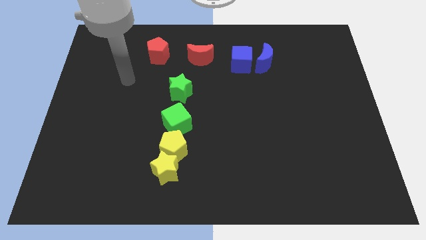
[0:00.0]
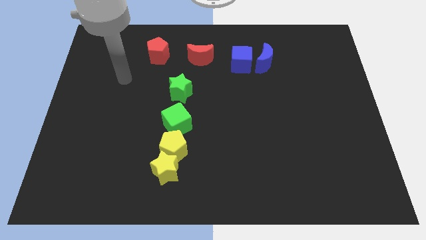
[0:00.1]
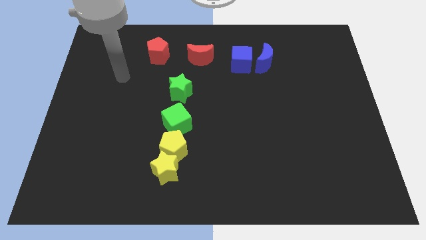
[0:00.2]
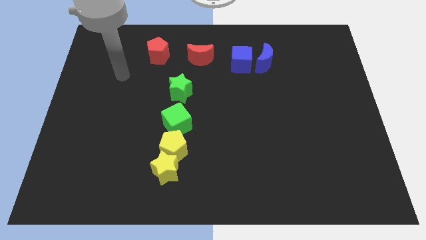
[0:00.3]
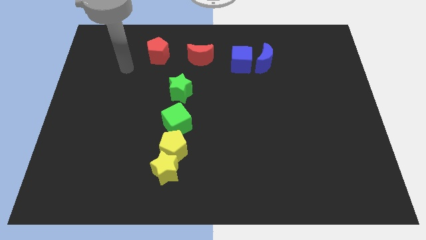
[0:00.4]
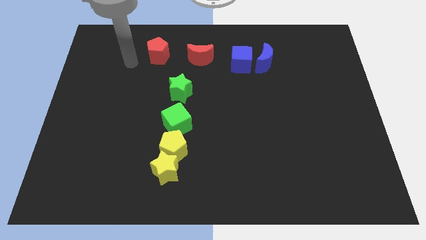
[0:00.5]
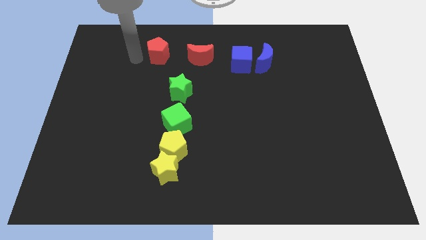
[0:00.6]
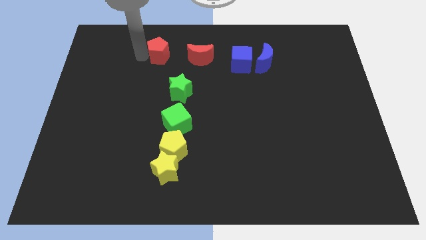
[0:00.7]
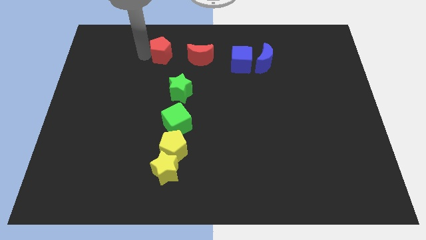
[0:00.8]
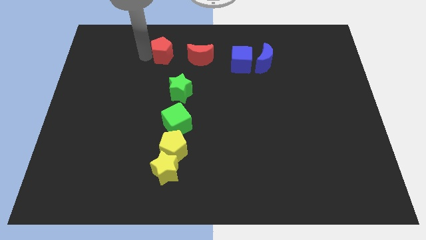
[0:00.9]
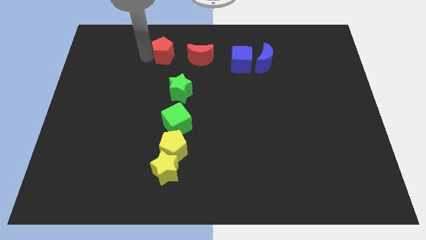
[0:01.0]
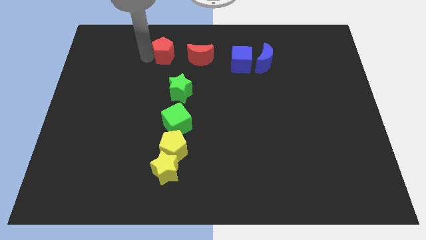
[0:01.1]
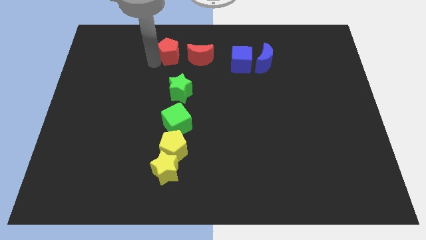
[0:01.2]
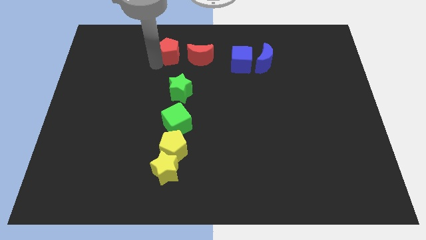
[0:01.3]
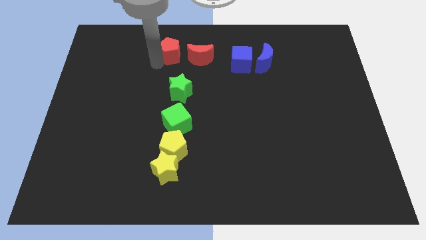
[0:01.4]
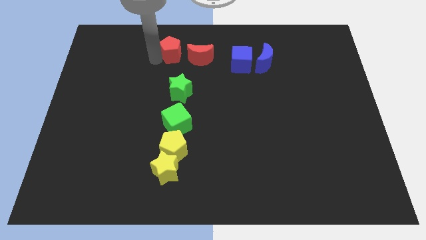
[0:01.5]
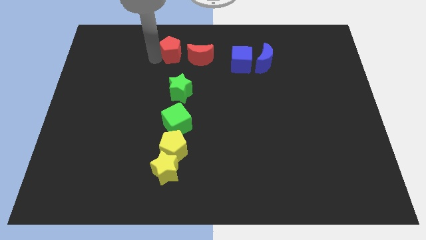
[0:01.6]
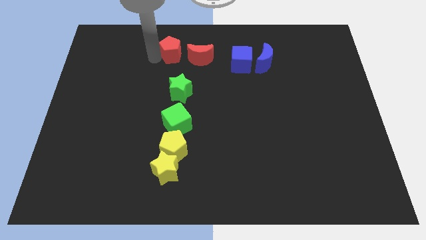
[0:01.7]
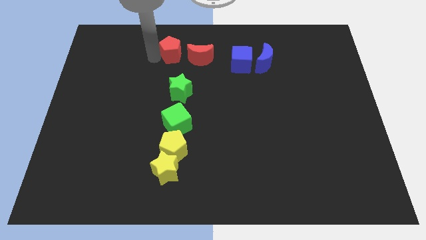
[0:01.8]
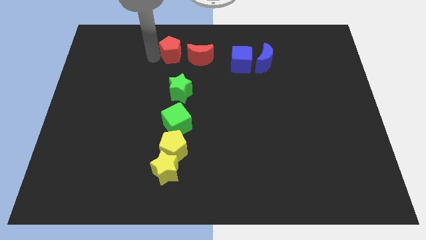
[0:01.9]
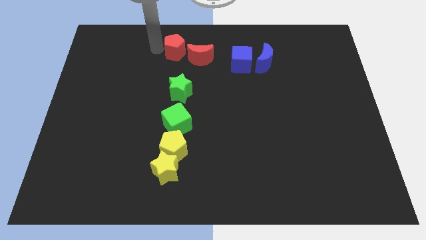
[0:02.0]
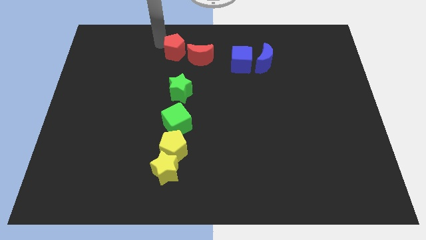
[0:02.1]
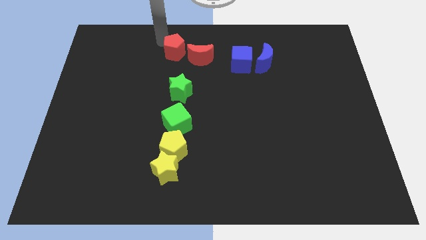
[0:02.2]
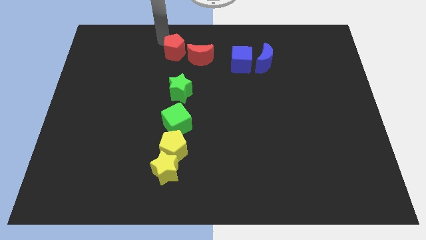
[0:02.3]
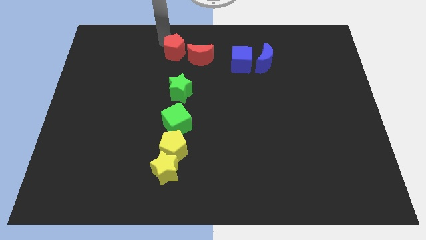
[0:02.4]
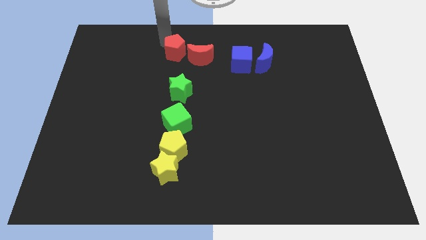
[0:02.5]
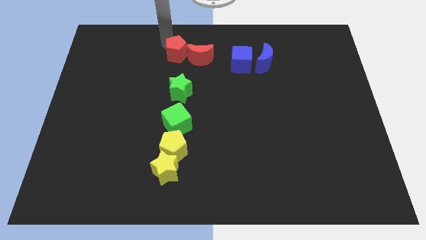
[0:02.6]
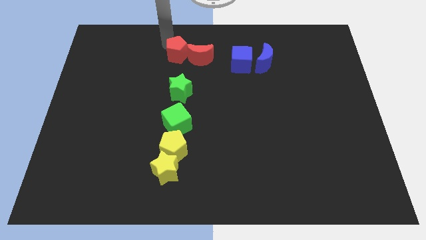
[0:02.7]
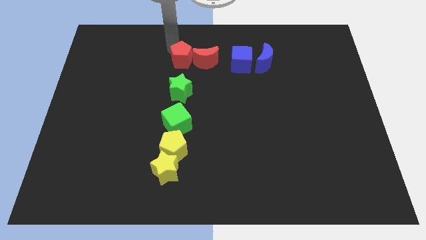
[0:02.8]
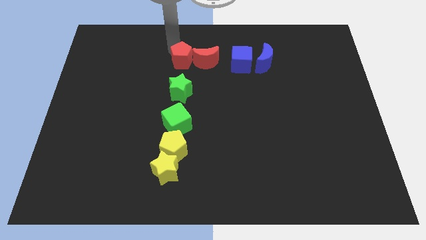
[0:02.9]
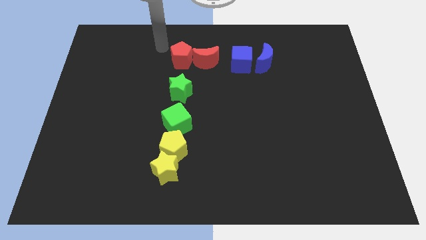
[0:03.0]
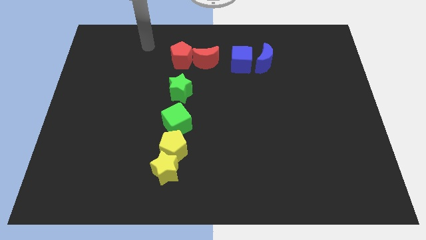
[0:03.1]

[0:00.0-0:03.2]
push the red pentagon close to red moon

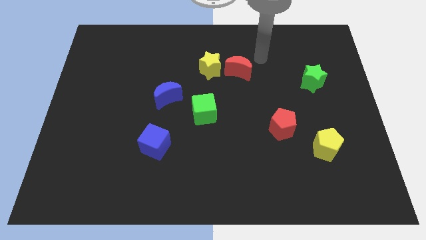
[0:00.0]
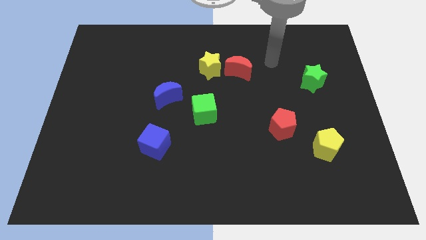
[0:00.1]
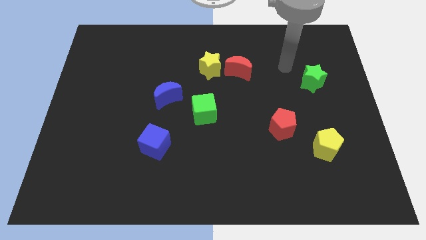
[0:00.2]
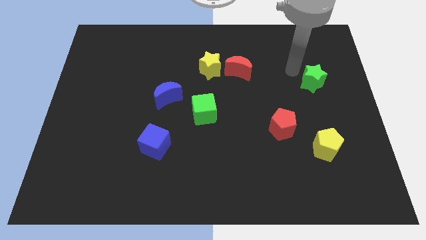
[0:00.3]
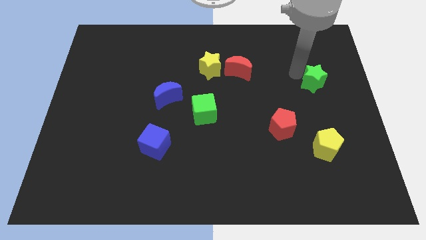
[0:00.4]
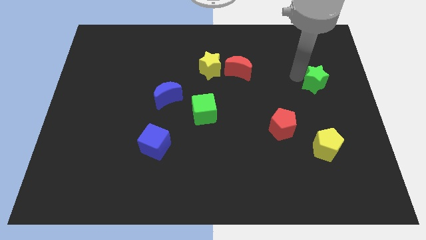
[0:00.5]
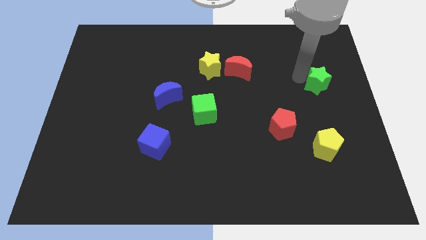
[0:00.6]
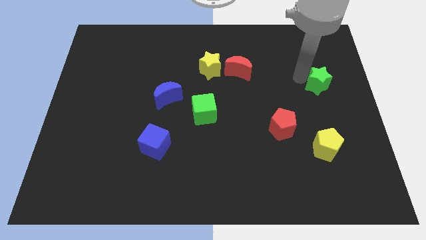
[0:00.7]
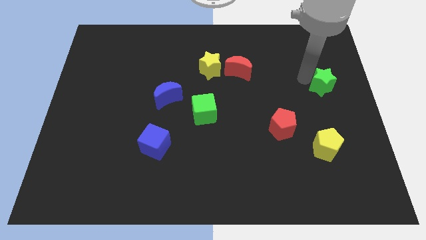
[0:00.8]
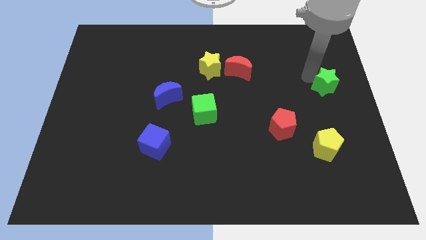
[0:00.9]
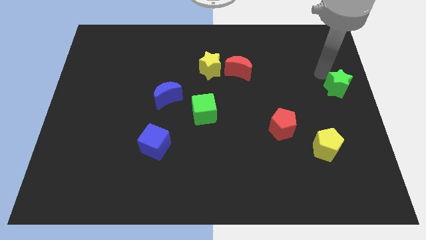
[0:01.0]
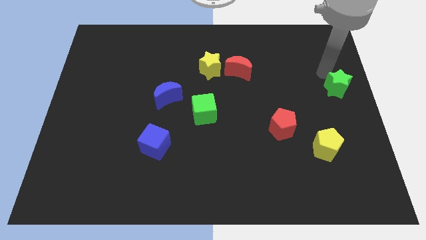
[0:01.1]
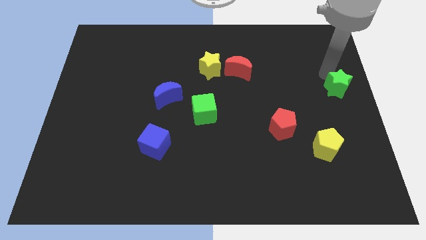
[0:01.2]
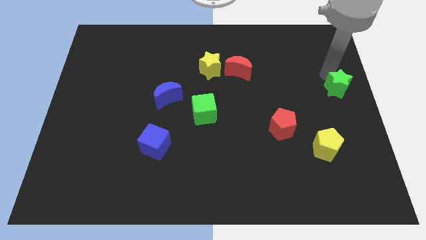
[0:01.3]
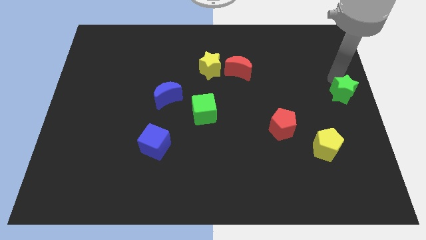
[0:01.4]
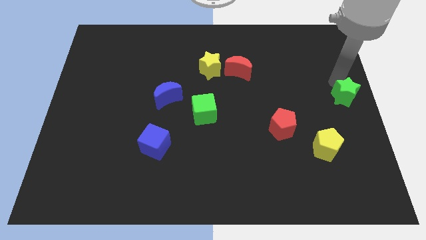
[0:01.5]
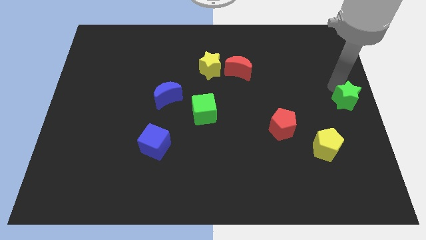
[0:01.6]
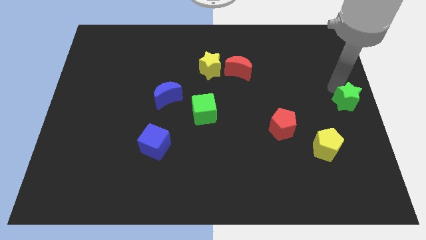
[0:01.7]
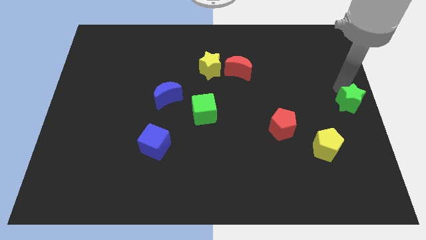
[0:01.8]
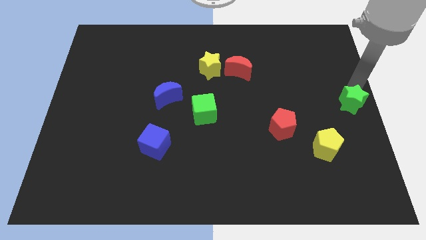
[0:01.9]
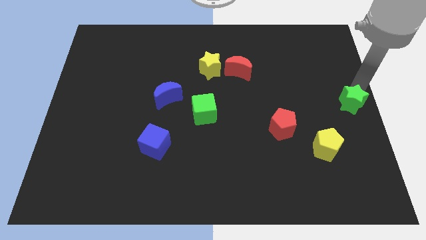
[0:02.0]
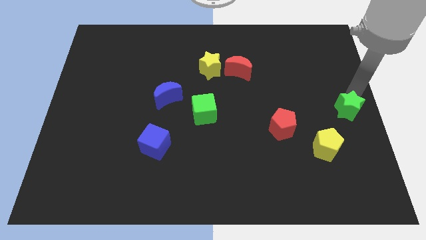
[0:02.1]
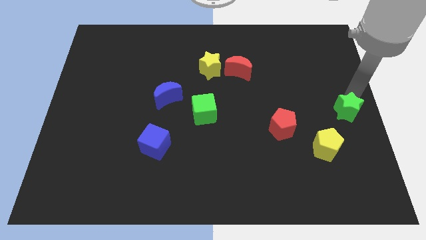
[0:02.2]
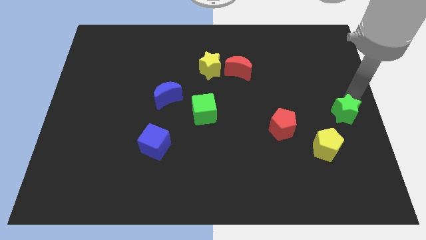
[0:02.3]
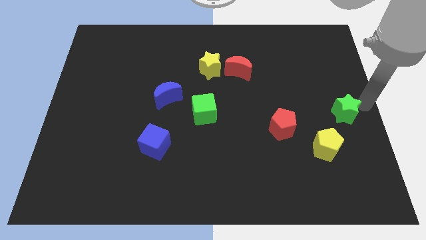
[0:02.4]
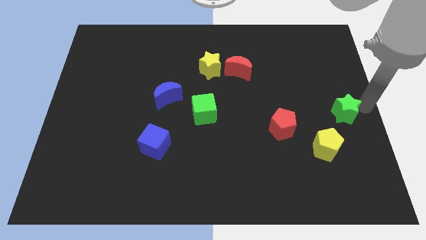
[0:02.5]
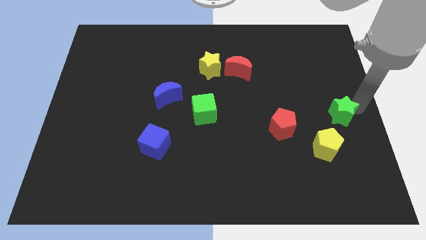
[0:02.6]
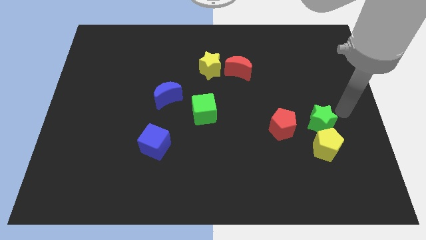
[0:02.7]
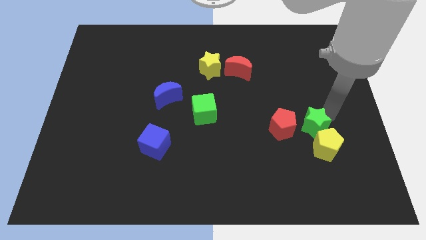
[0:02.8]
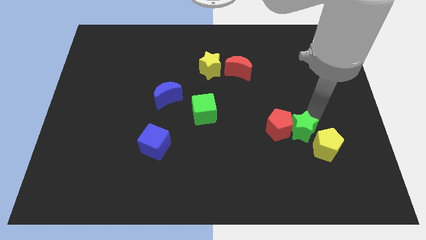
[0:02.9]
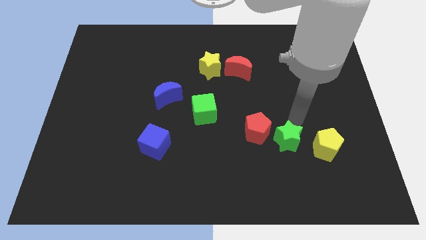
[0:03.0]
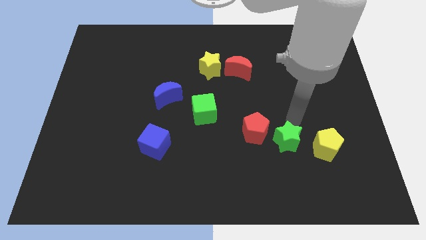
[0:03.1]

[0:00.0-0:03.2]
place the green star in between red pentagon and yellow pentagon

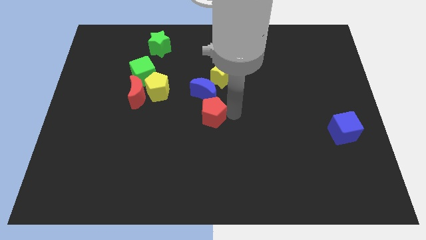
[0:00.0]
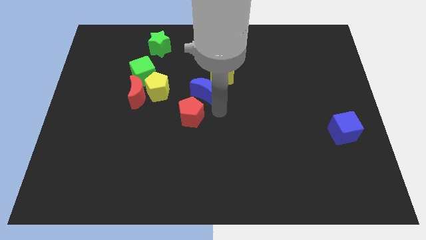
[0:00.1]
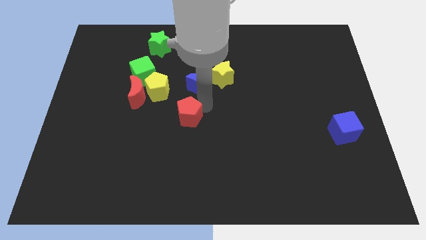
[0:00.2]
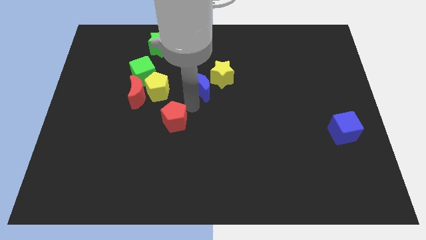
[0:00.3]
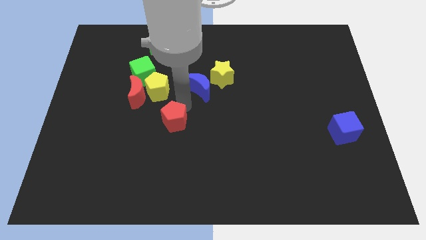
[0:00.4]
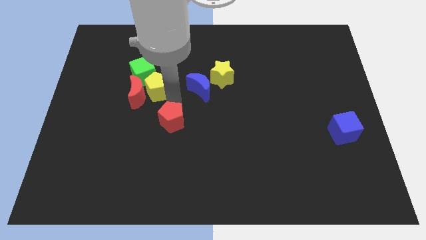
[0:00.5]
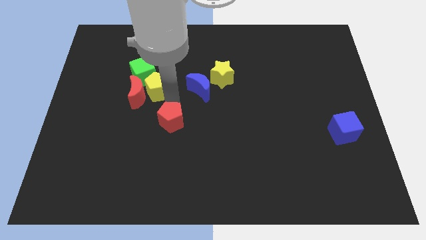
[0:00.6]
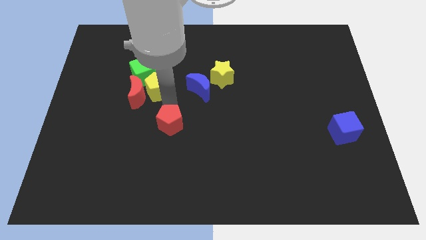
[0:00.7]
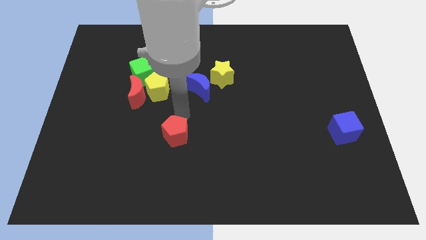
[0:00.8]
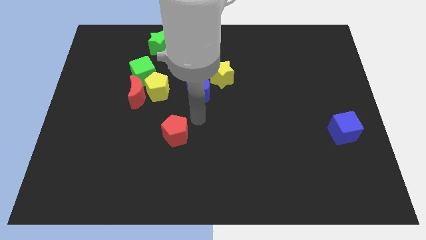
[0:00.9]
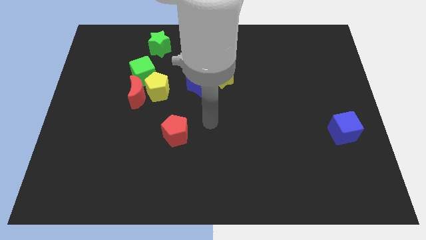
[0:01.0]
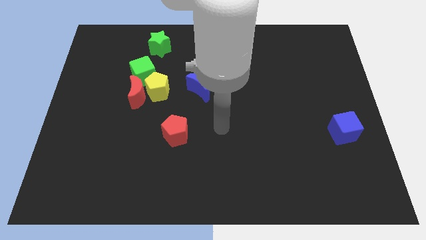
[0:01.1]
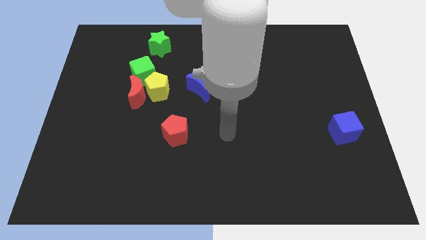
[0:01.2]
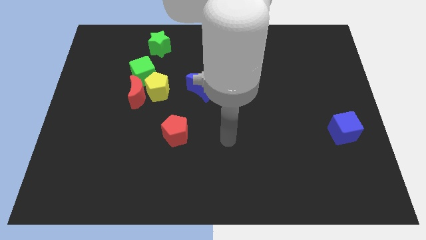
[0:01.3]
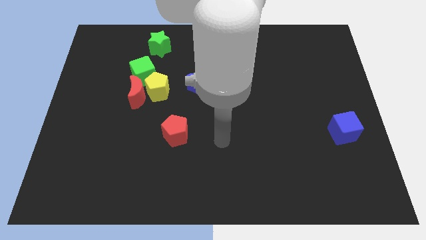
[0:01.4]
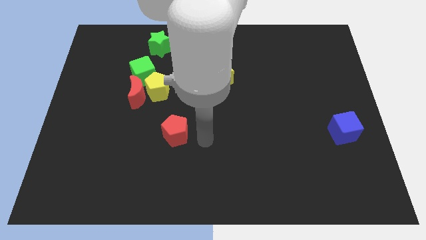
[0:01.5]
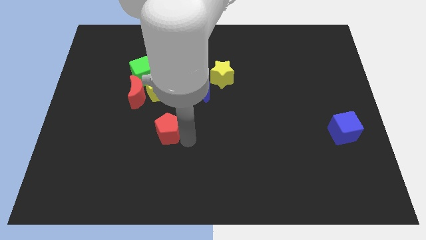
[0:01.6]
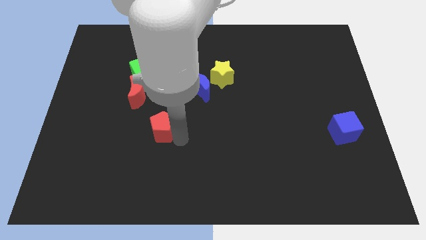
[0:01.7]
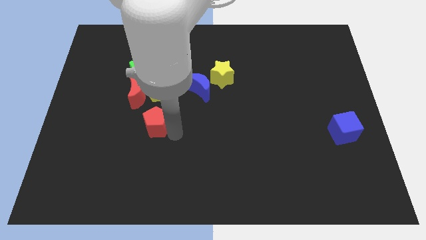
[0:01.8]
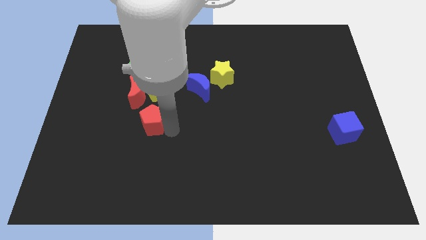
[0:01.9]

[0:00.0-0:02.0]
push the red pentagon towards the red moon

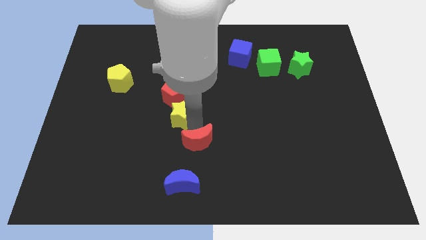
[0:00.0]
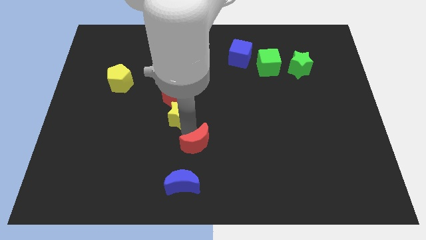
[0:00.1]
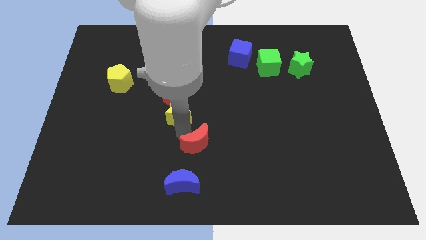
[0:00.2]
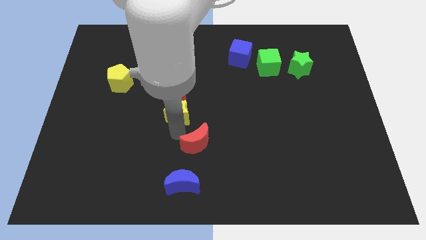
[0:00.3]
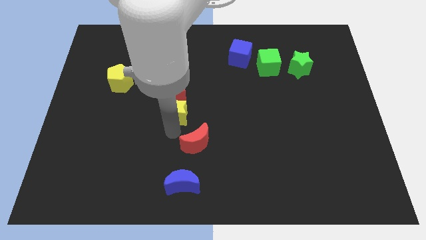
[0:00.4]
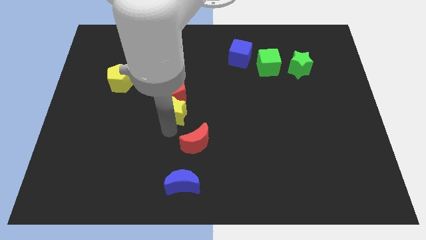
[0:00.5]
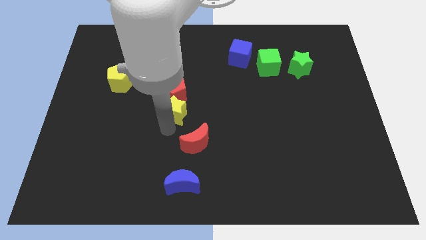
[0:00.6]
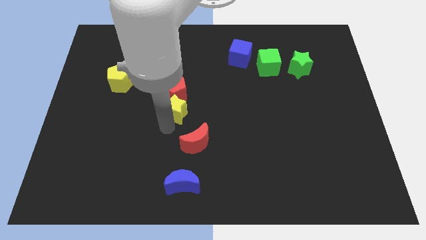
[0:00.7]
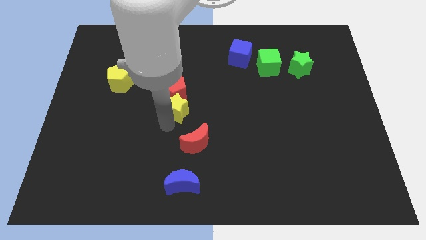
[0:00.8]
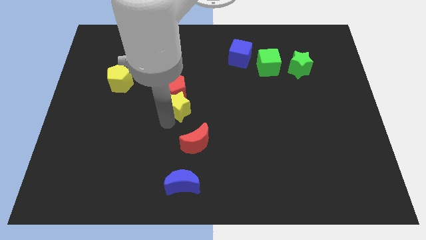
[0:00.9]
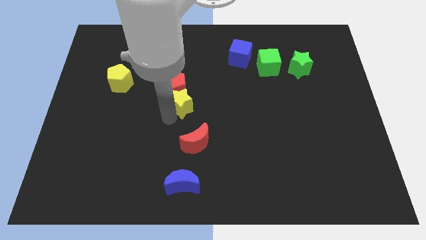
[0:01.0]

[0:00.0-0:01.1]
move the yellow star into the bottom of the red pentagon
